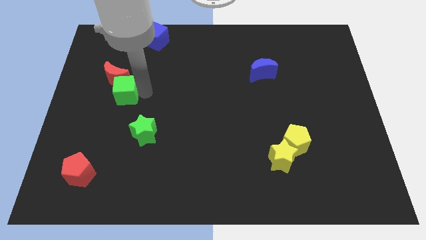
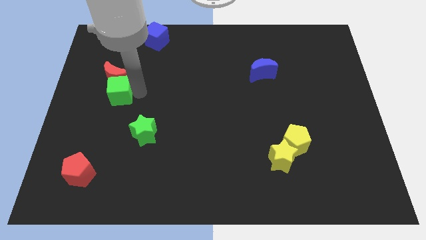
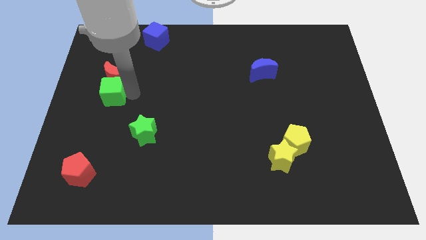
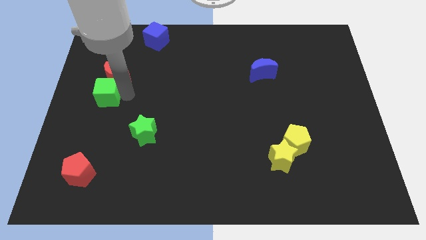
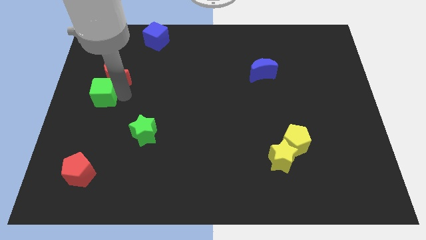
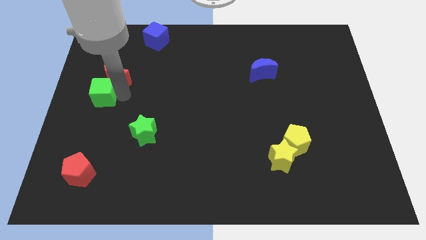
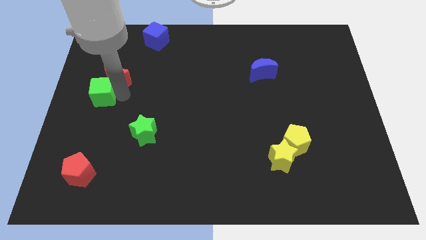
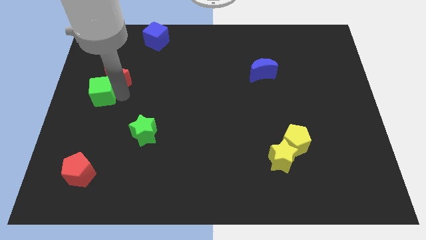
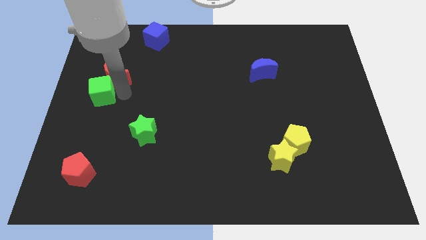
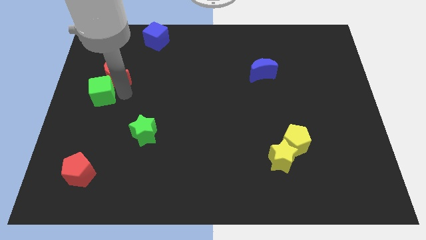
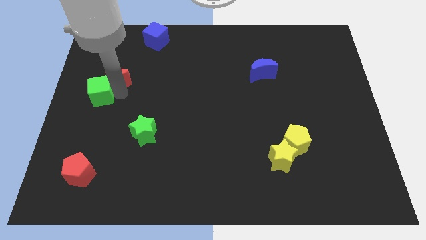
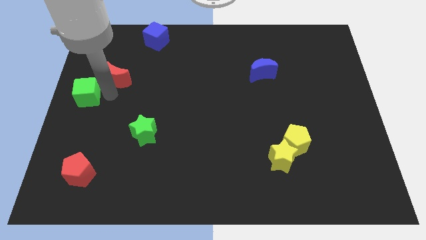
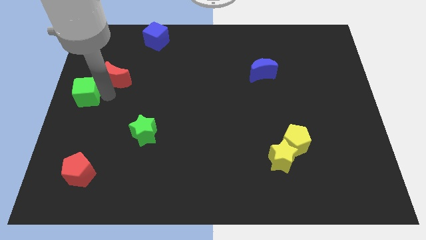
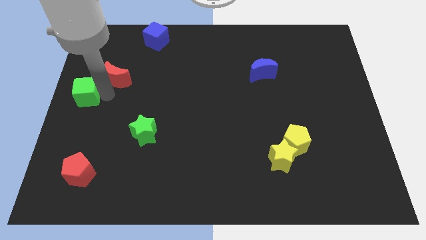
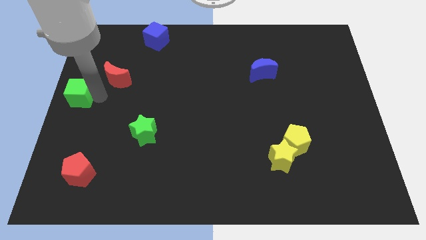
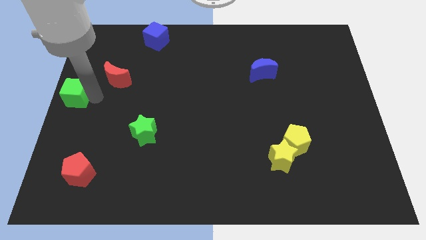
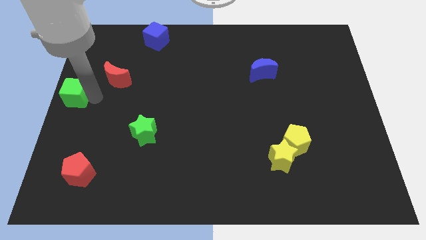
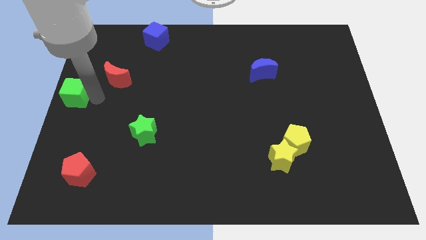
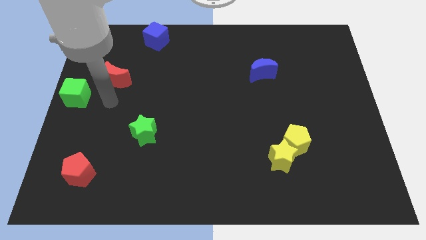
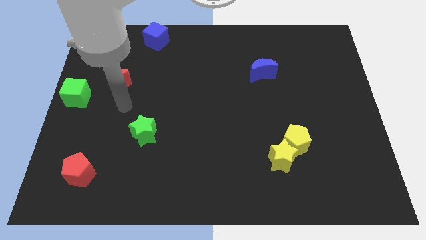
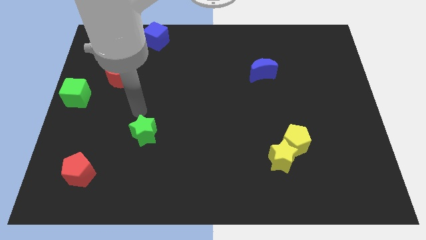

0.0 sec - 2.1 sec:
place green cube to the bottom left of red moon

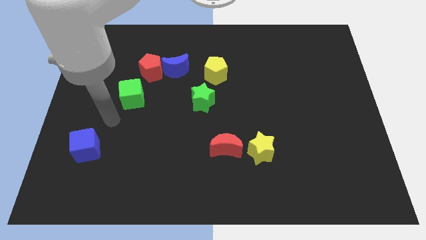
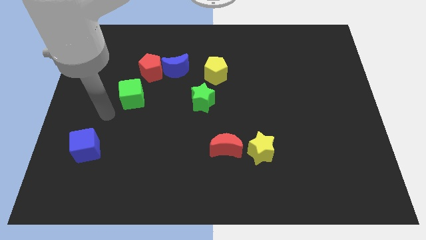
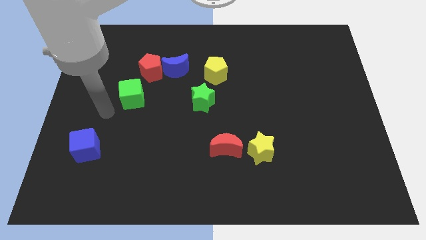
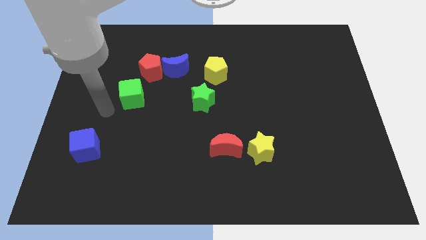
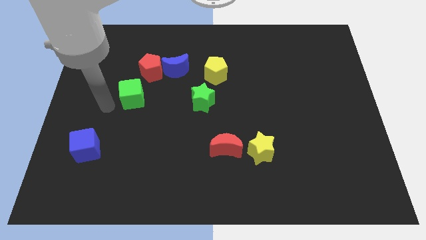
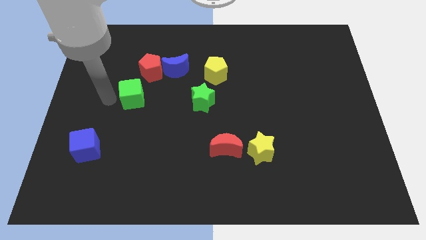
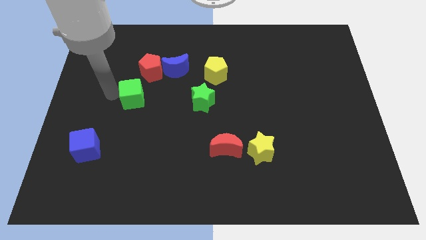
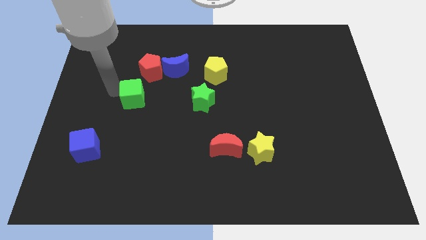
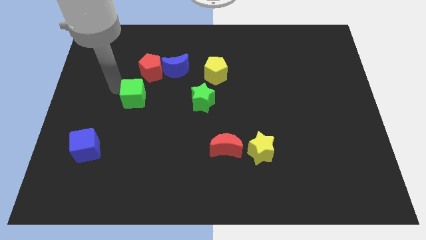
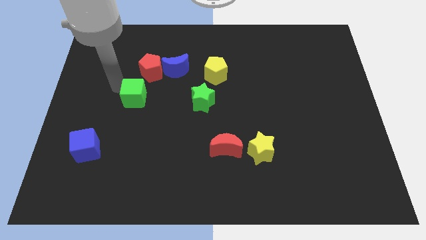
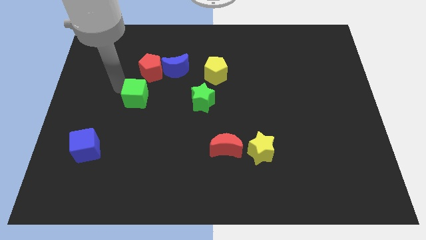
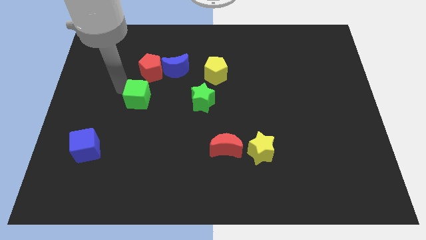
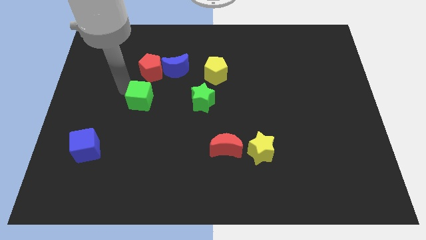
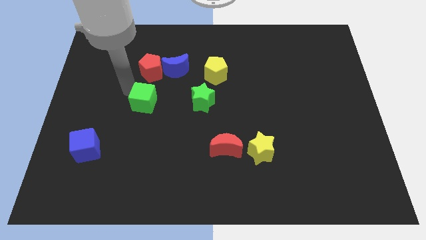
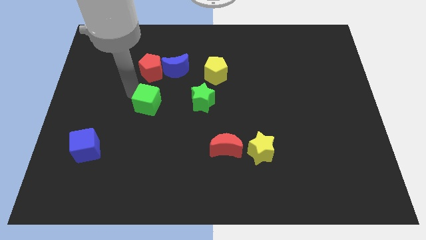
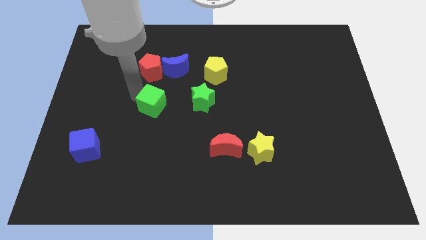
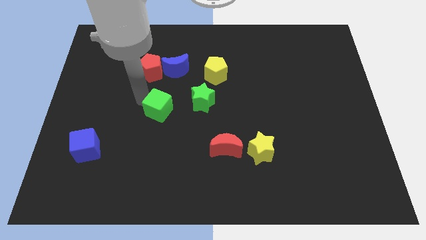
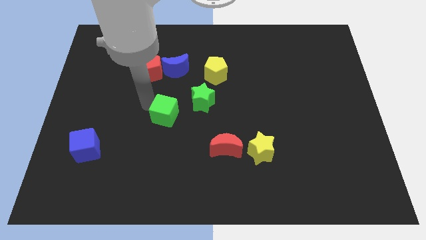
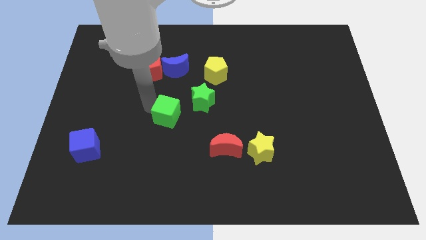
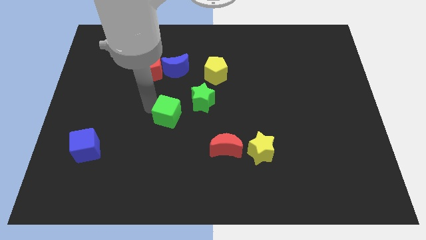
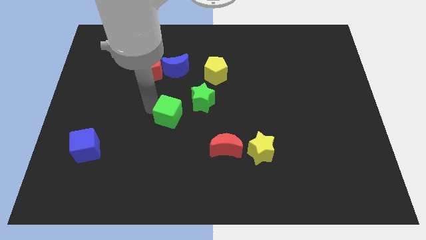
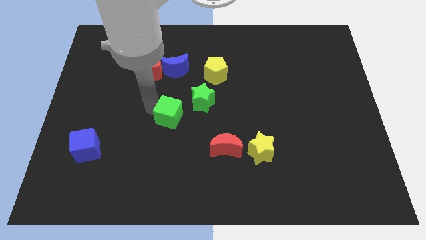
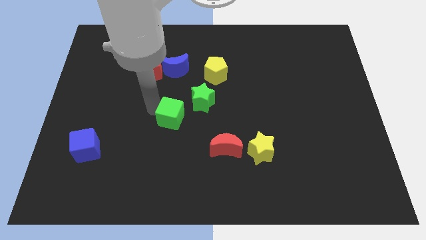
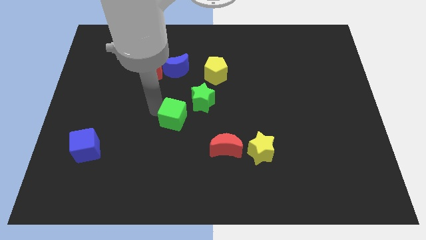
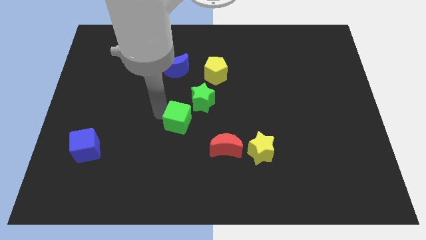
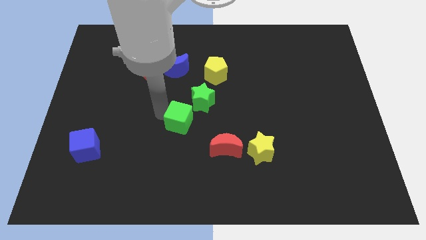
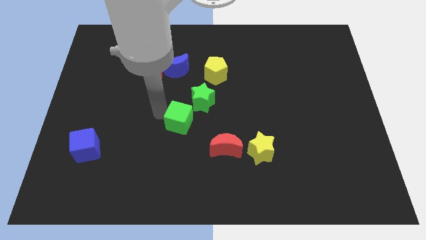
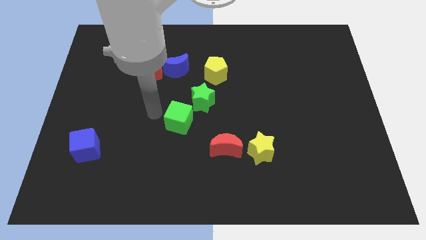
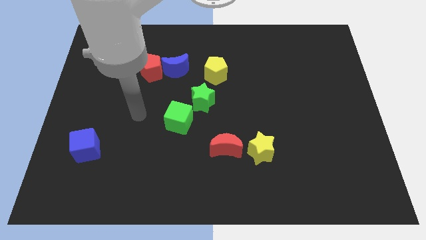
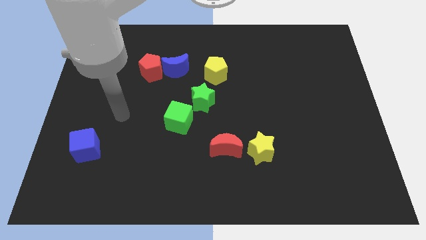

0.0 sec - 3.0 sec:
place green cube below blue crescent

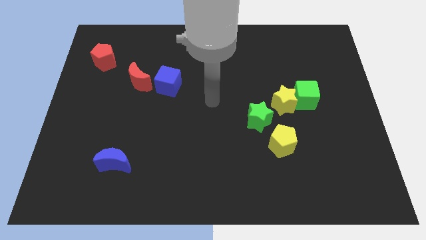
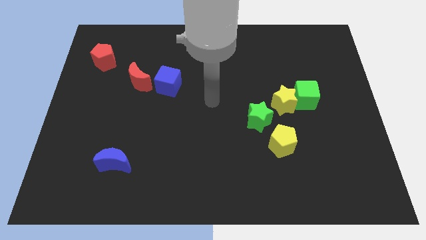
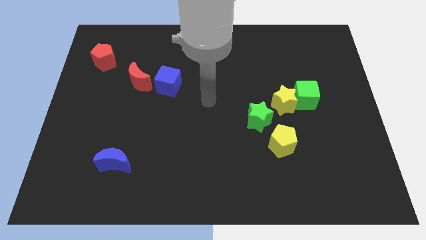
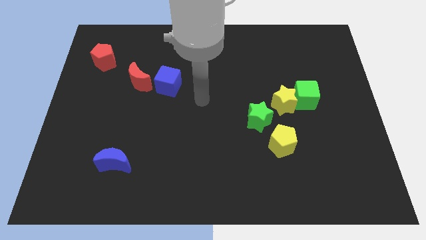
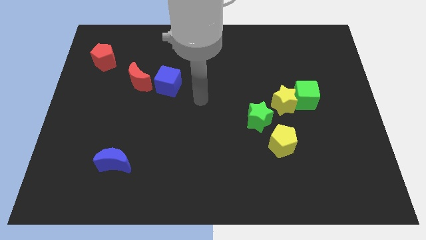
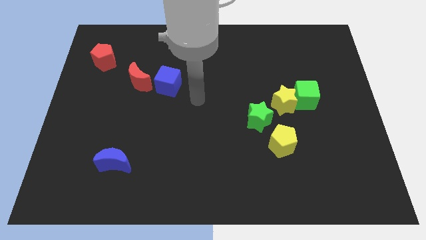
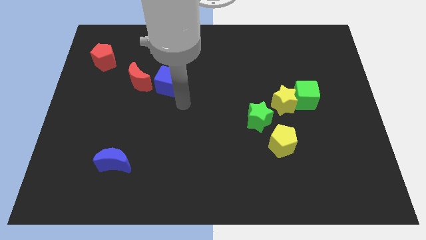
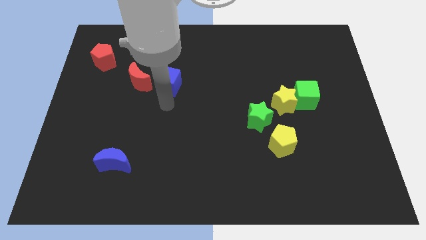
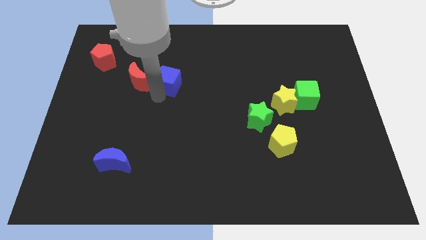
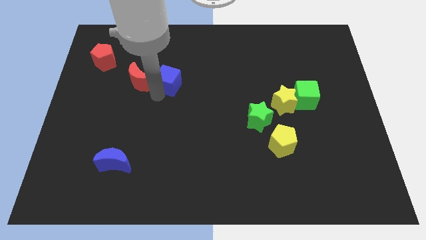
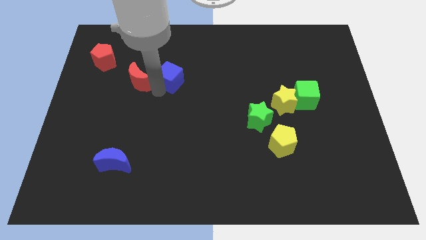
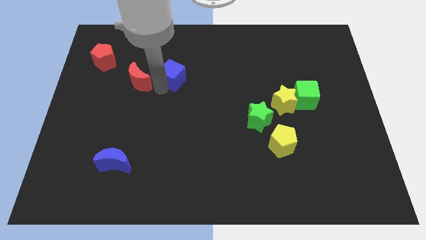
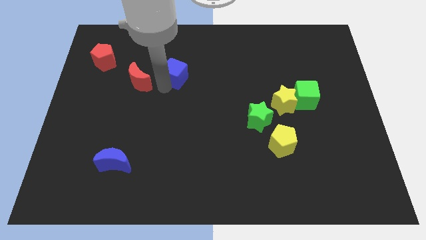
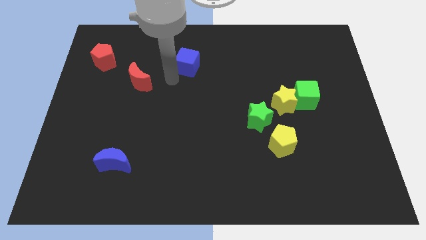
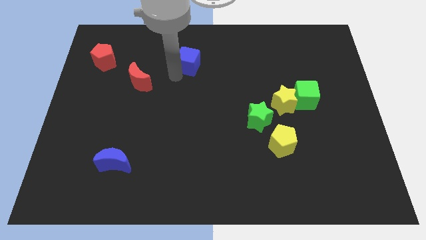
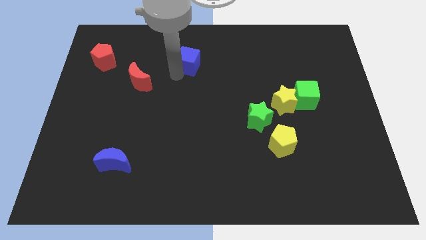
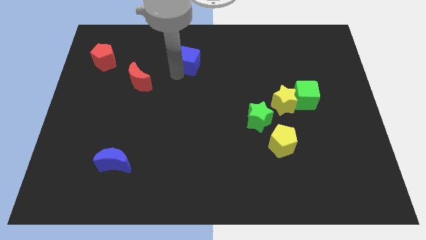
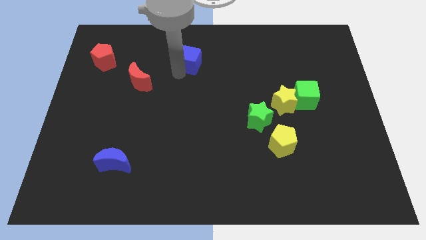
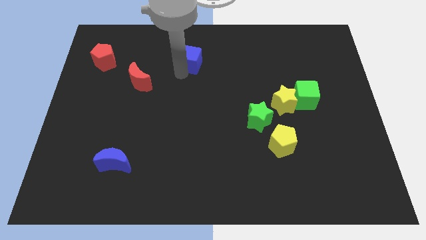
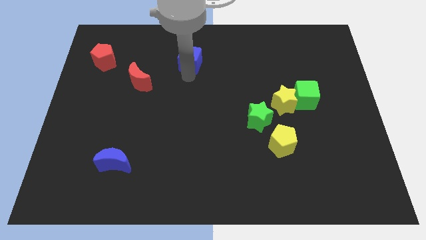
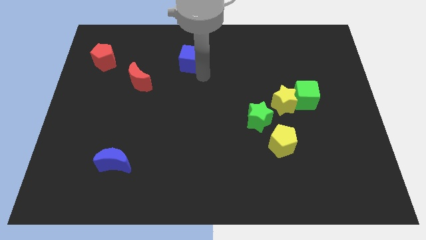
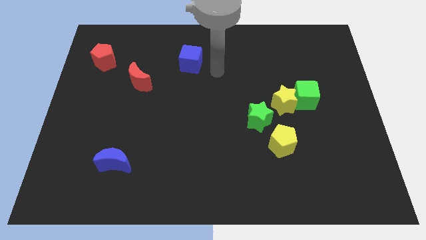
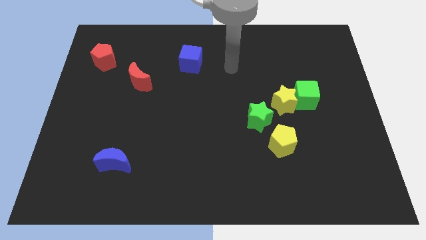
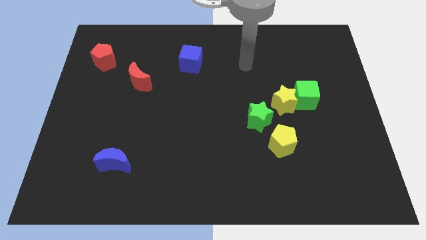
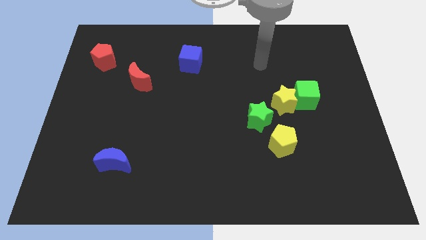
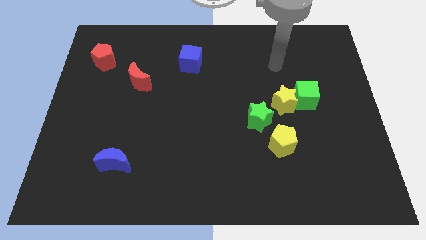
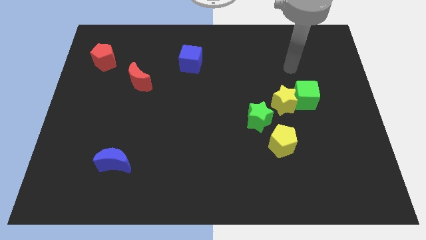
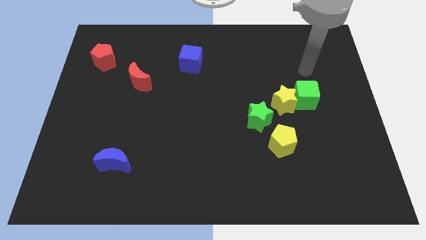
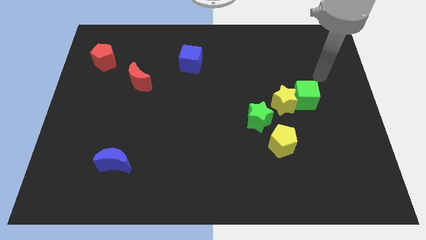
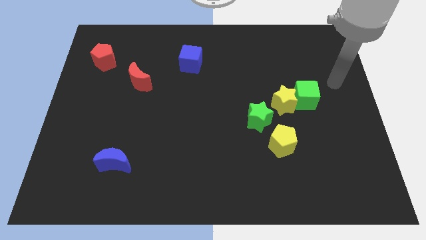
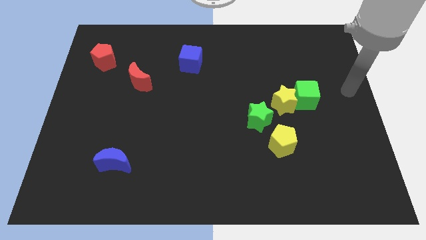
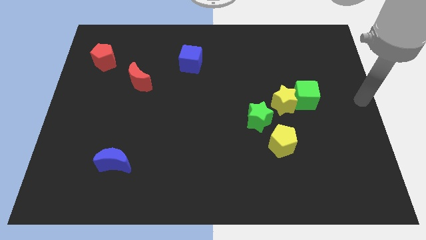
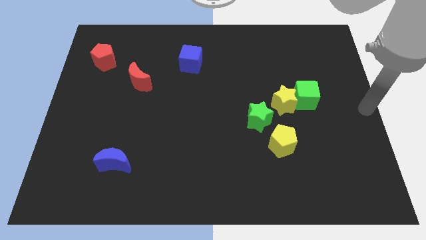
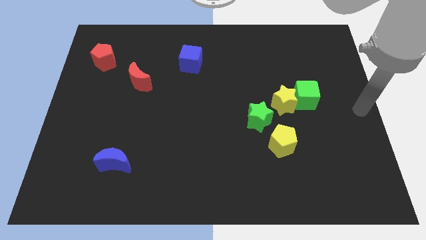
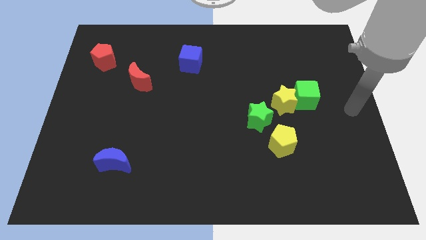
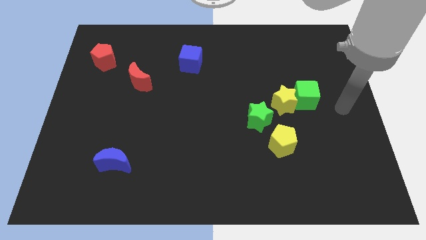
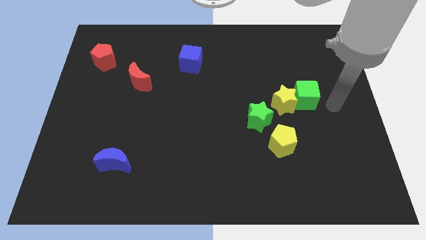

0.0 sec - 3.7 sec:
slightly push the blue cube towards top of the board
